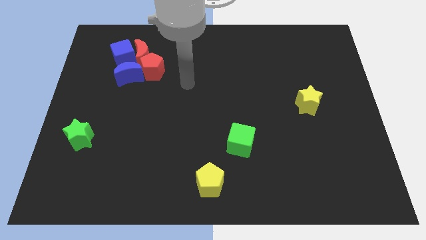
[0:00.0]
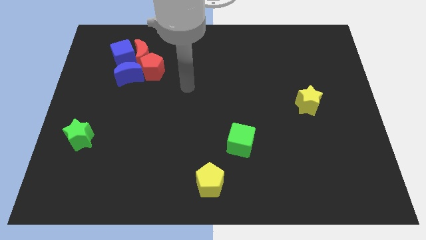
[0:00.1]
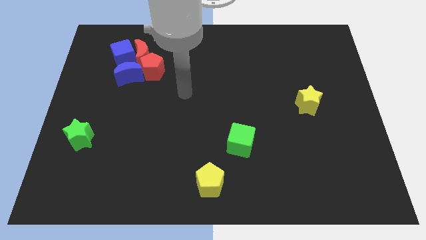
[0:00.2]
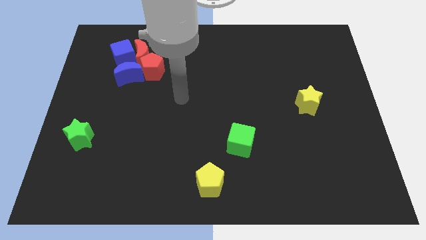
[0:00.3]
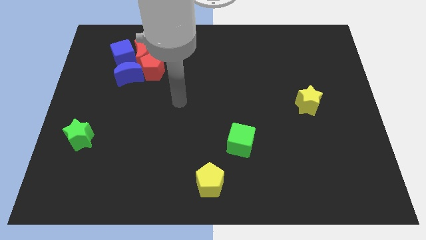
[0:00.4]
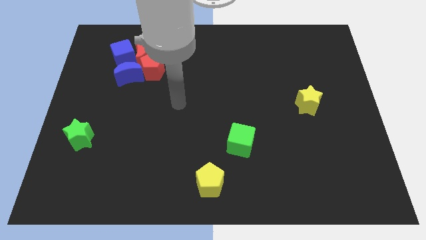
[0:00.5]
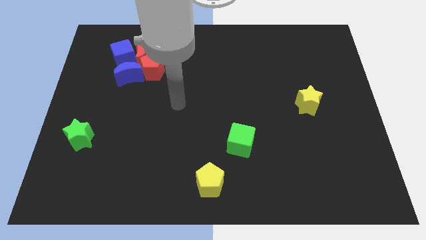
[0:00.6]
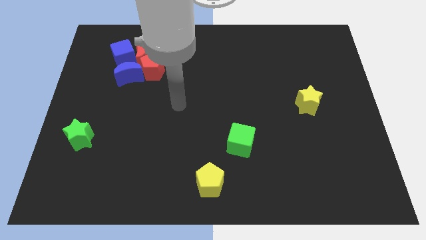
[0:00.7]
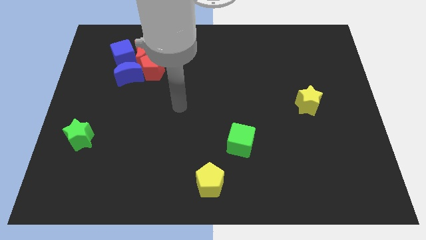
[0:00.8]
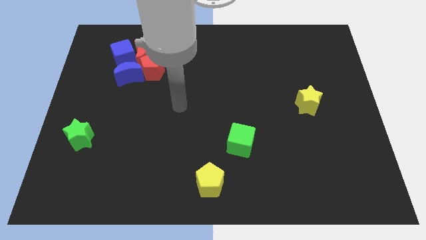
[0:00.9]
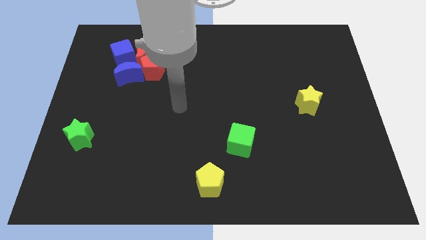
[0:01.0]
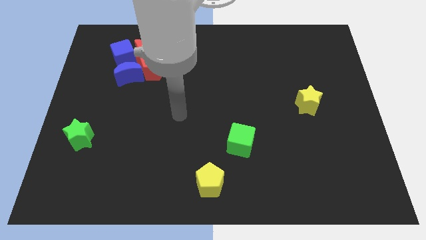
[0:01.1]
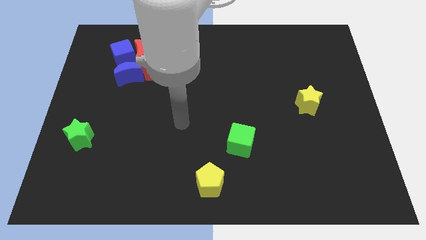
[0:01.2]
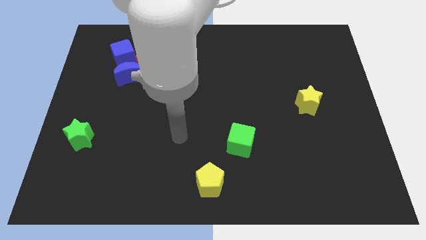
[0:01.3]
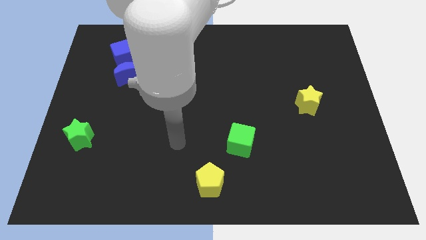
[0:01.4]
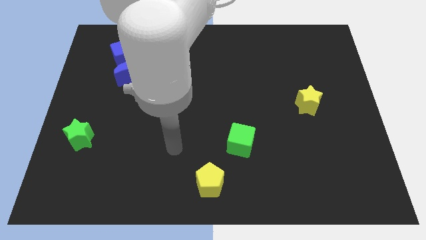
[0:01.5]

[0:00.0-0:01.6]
move yourself away from the red pentagon

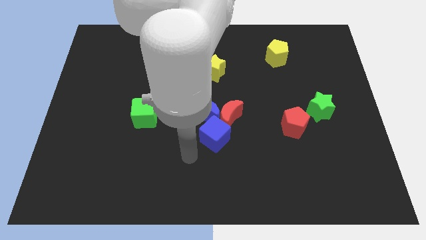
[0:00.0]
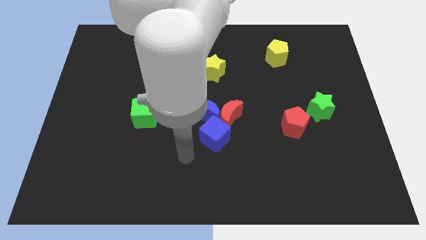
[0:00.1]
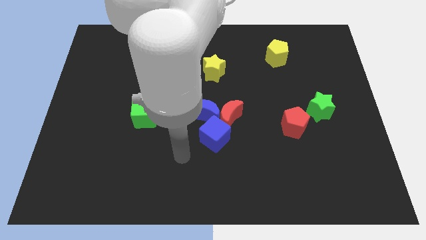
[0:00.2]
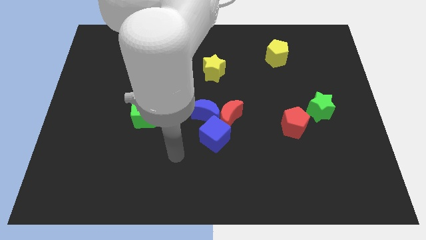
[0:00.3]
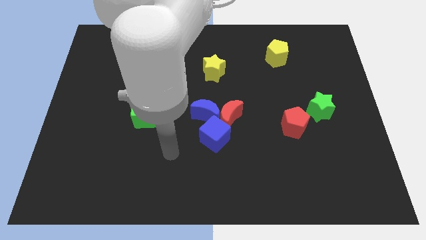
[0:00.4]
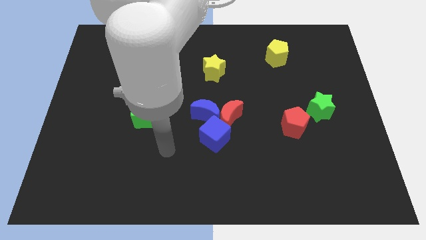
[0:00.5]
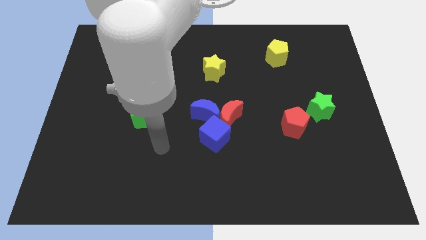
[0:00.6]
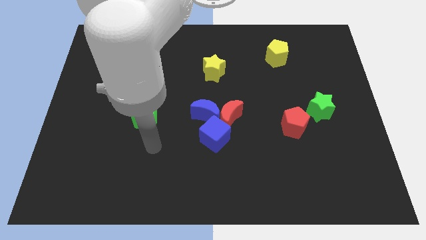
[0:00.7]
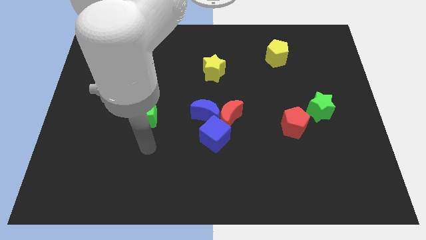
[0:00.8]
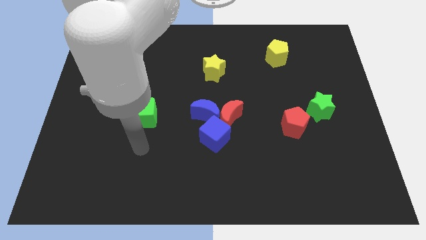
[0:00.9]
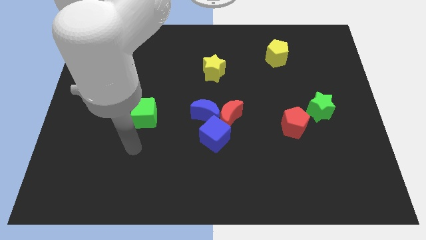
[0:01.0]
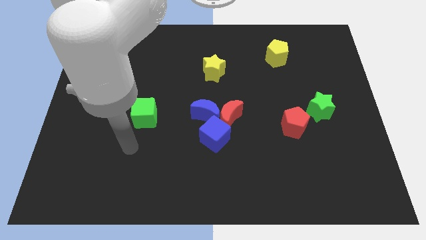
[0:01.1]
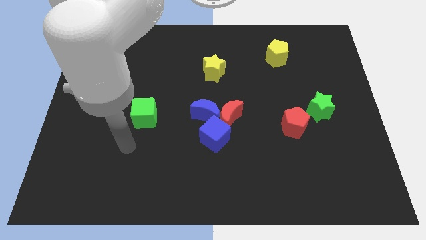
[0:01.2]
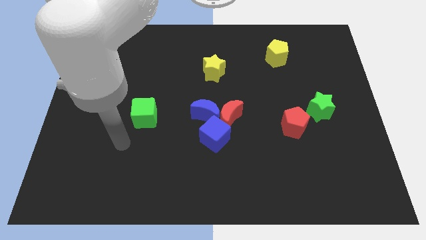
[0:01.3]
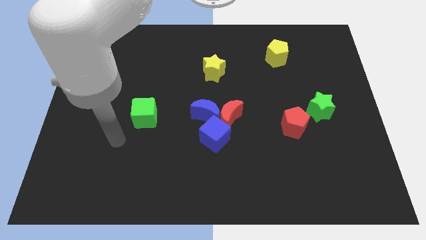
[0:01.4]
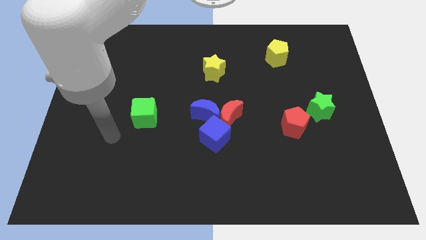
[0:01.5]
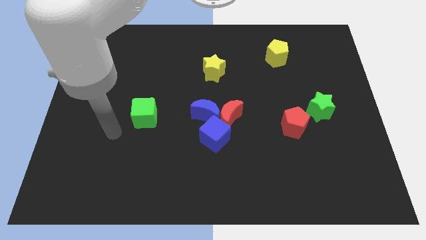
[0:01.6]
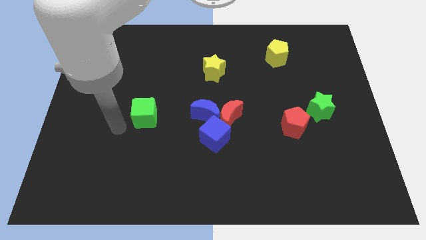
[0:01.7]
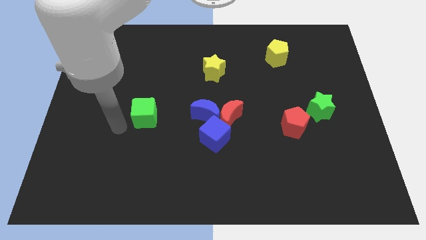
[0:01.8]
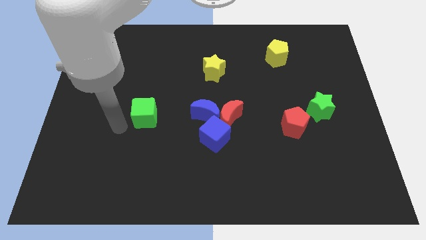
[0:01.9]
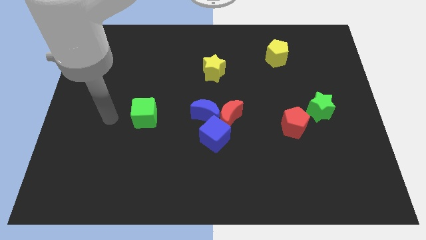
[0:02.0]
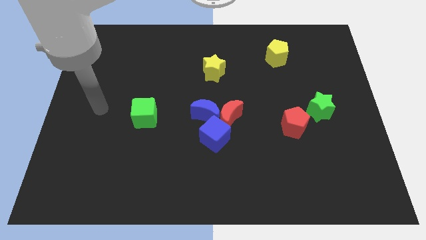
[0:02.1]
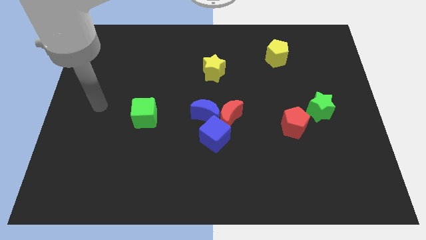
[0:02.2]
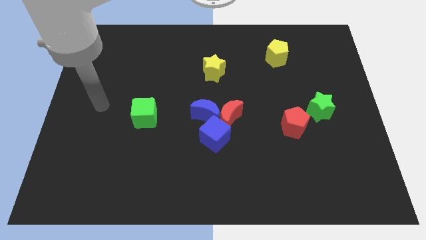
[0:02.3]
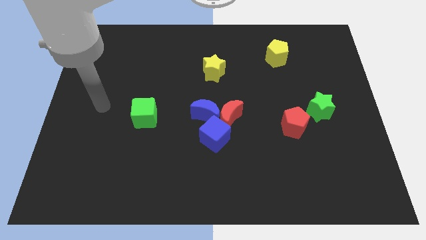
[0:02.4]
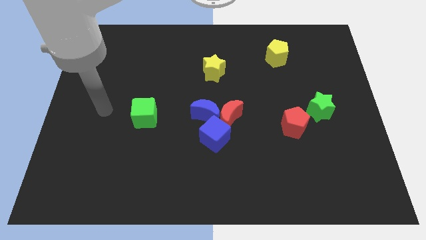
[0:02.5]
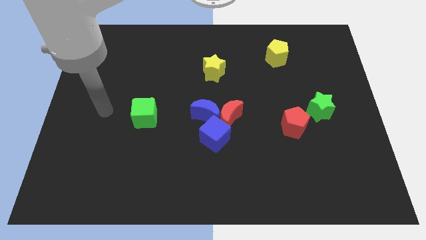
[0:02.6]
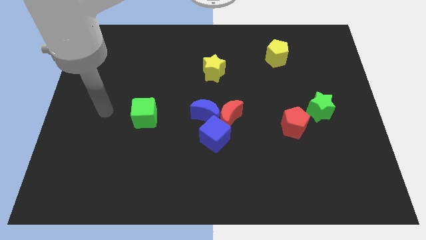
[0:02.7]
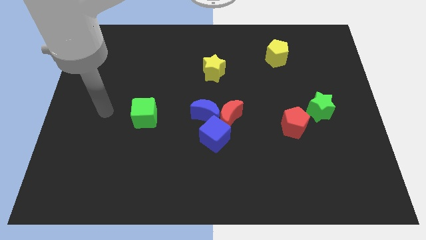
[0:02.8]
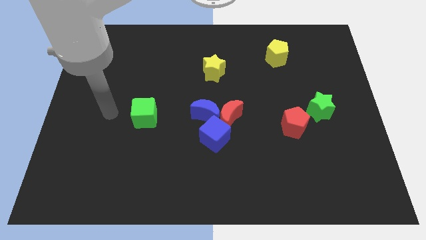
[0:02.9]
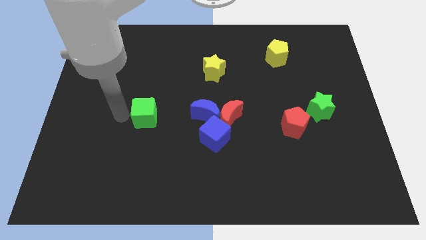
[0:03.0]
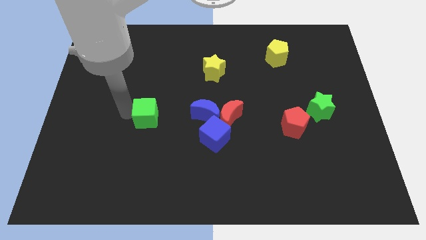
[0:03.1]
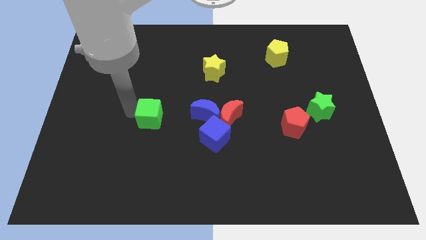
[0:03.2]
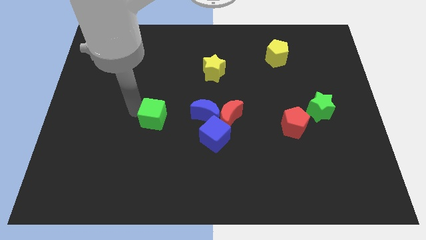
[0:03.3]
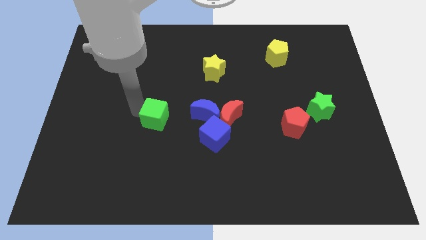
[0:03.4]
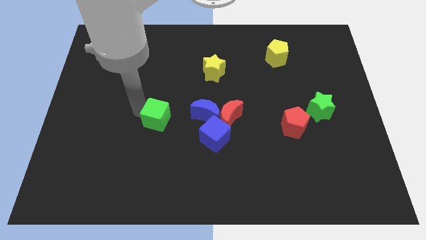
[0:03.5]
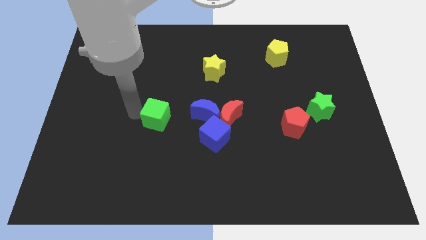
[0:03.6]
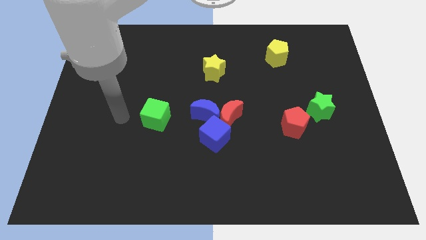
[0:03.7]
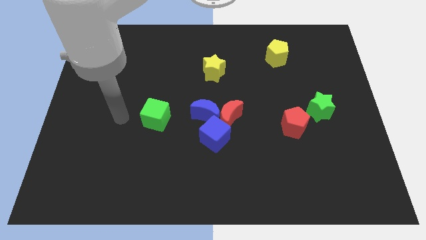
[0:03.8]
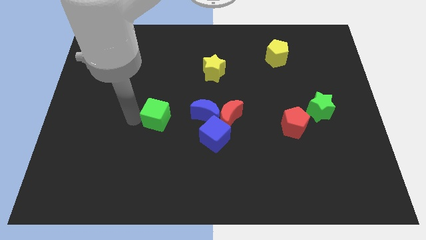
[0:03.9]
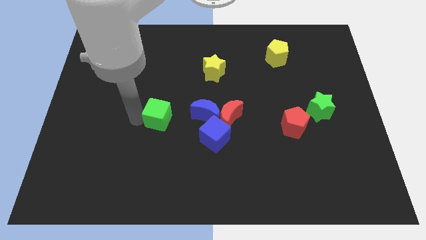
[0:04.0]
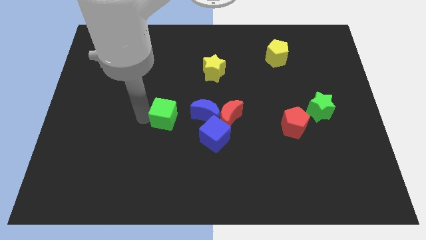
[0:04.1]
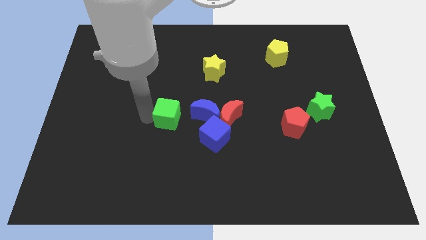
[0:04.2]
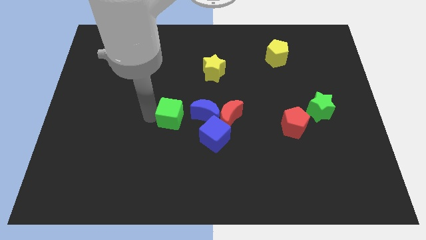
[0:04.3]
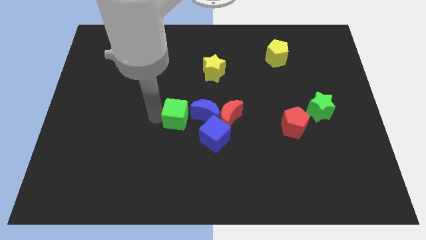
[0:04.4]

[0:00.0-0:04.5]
push the green cube to the left of the blue crescent

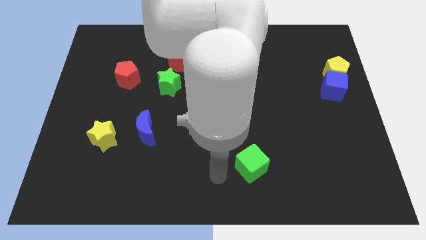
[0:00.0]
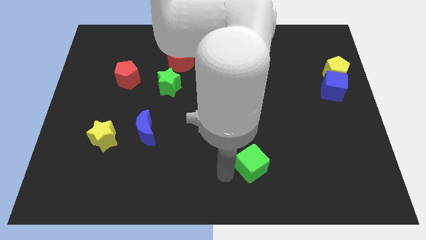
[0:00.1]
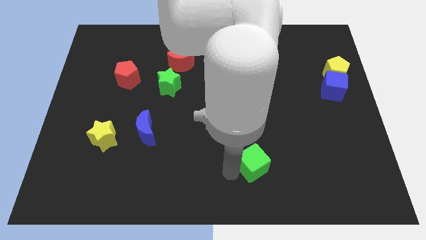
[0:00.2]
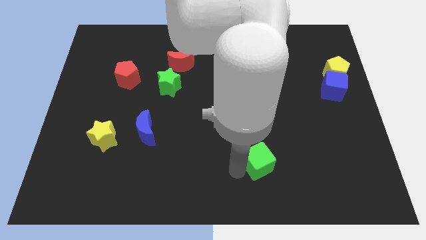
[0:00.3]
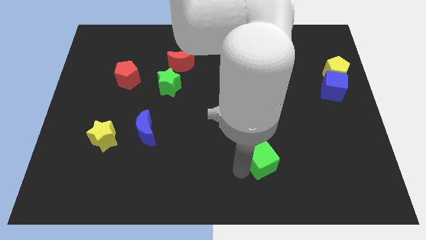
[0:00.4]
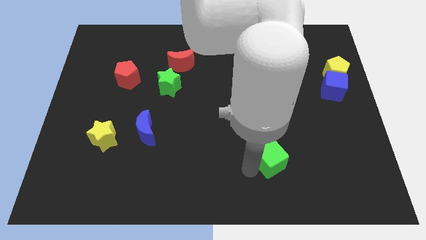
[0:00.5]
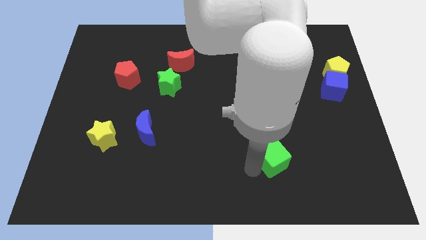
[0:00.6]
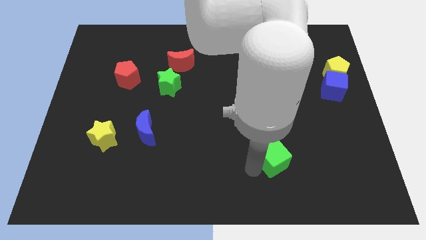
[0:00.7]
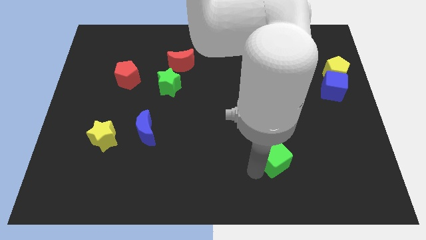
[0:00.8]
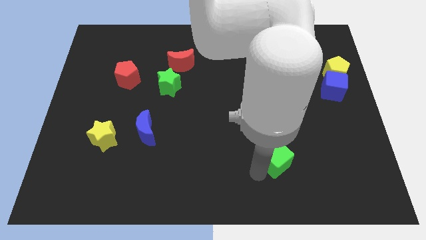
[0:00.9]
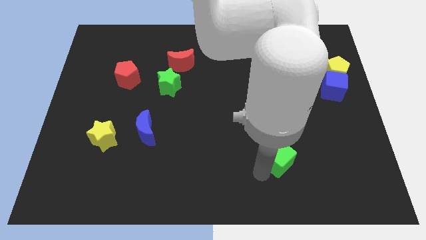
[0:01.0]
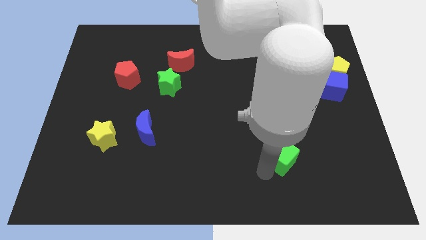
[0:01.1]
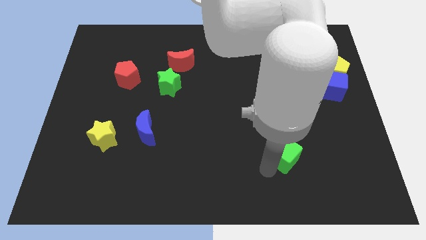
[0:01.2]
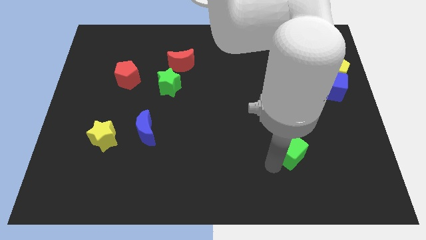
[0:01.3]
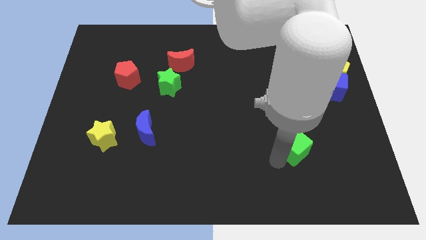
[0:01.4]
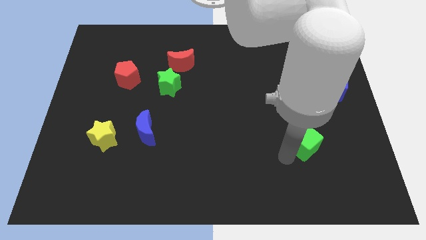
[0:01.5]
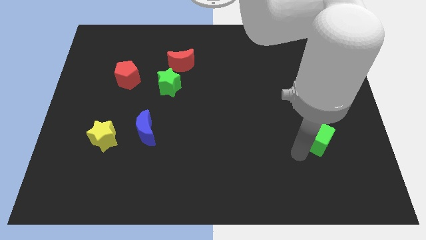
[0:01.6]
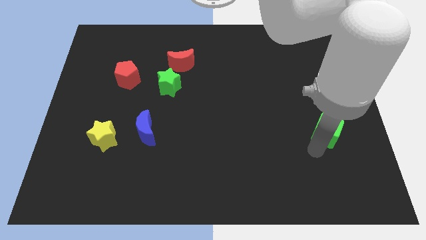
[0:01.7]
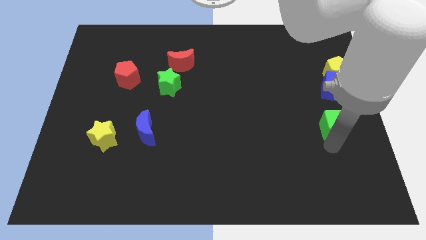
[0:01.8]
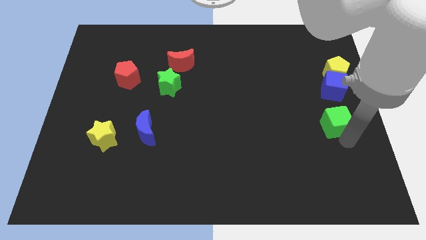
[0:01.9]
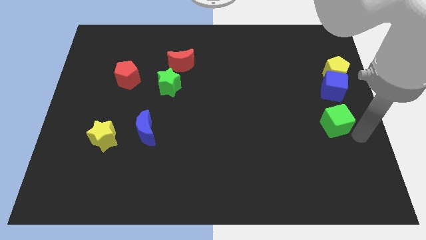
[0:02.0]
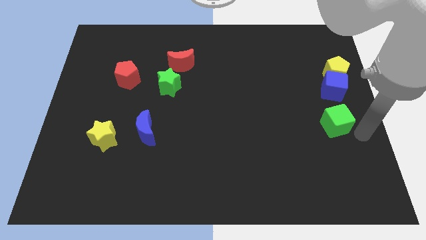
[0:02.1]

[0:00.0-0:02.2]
place green cube below blue cube

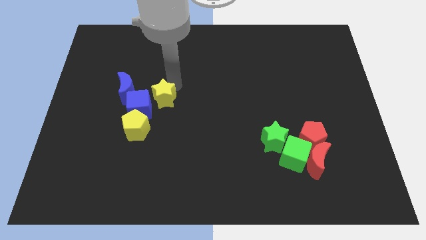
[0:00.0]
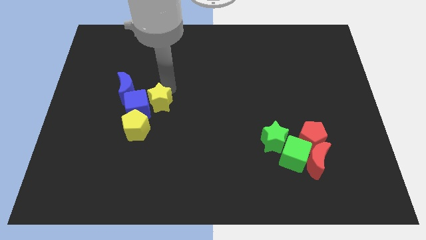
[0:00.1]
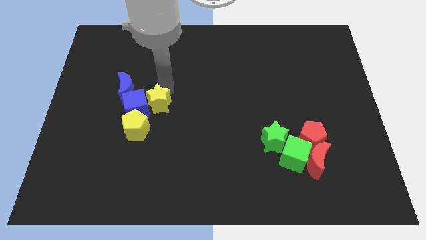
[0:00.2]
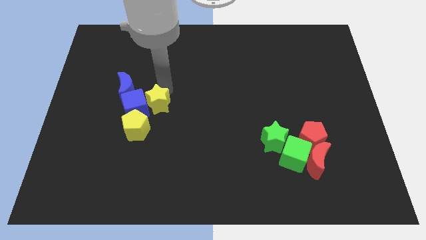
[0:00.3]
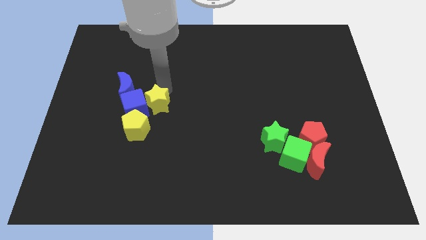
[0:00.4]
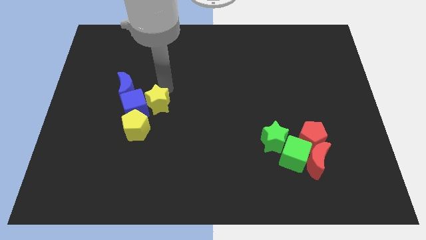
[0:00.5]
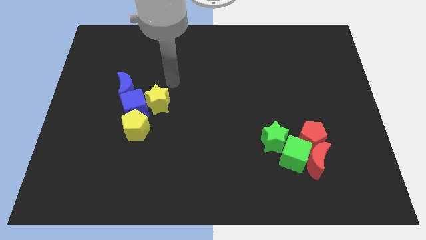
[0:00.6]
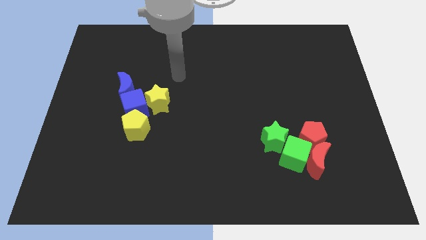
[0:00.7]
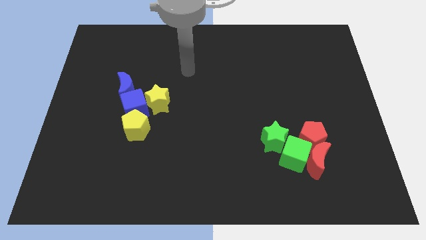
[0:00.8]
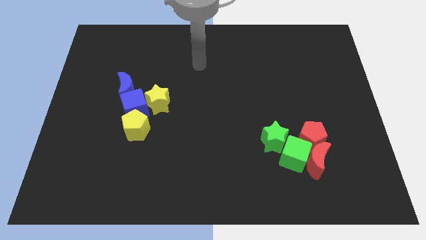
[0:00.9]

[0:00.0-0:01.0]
push the blue cube with the yellow star
